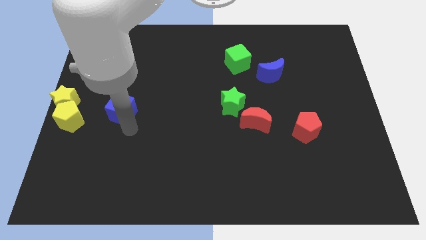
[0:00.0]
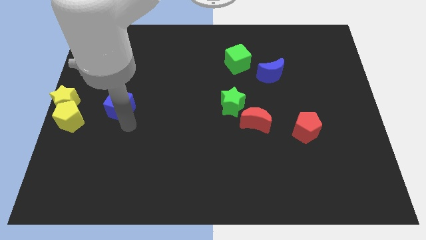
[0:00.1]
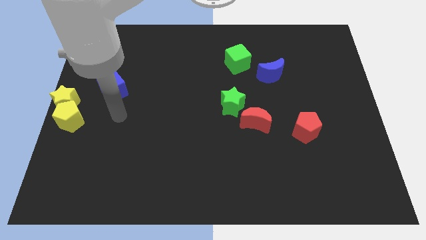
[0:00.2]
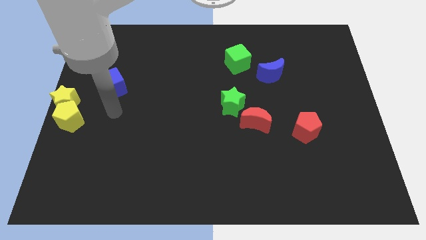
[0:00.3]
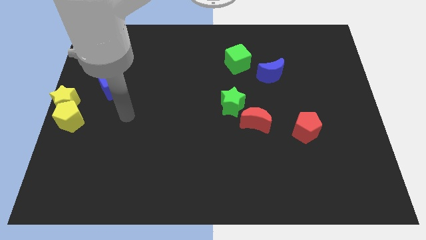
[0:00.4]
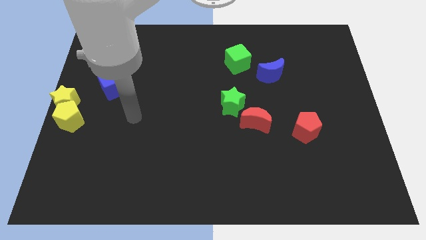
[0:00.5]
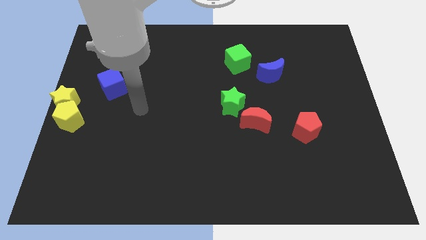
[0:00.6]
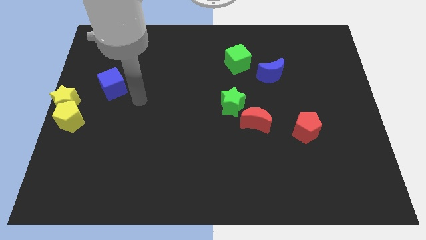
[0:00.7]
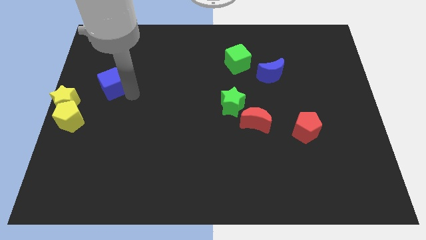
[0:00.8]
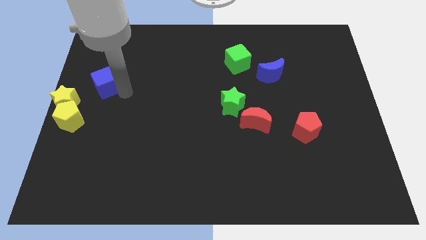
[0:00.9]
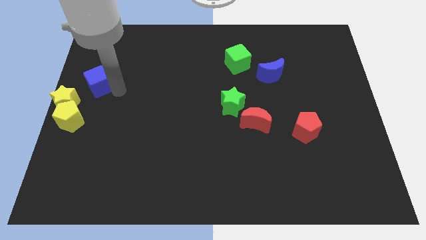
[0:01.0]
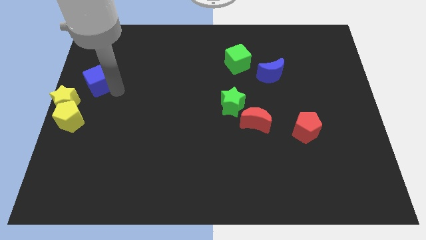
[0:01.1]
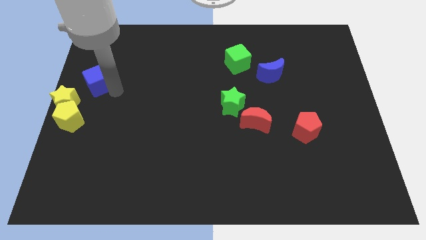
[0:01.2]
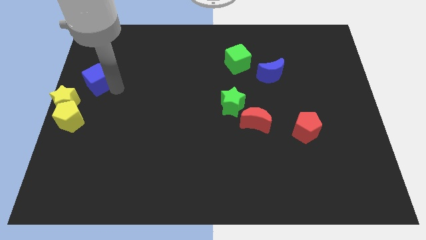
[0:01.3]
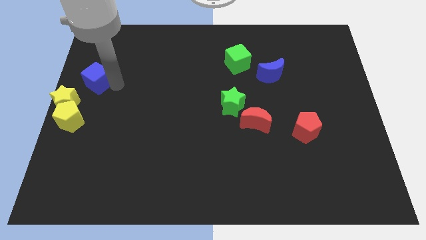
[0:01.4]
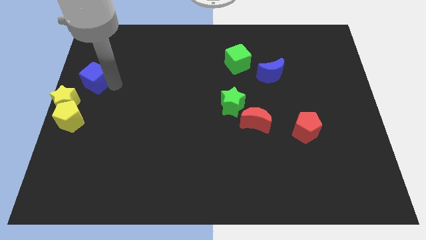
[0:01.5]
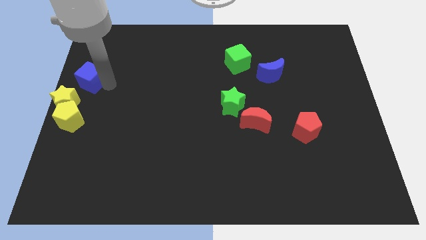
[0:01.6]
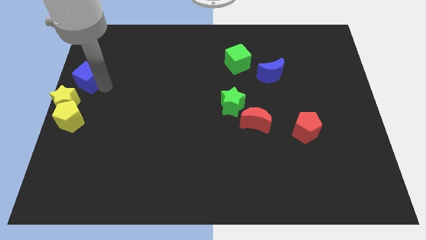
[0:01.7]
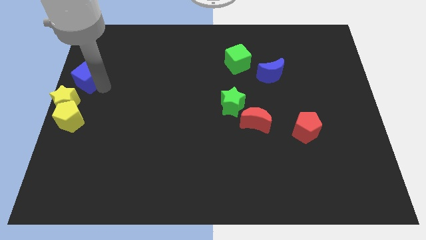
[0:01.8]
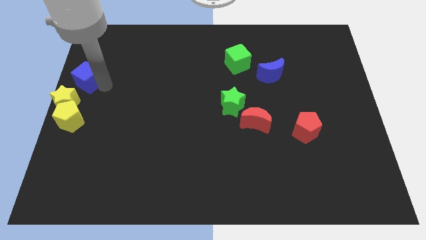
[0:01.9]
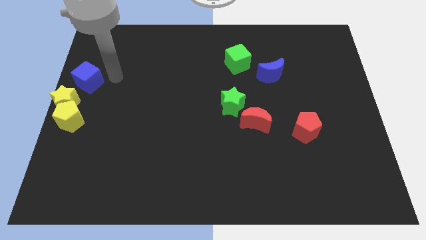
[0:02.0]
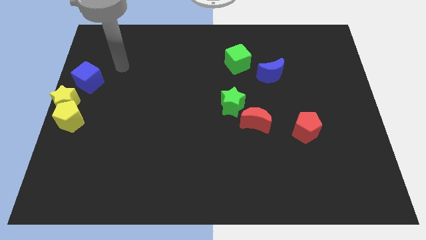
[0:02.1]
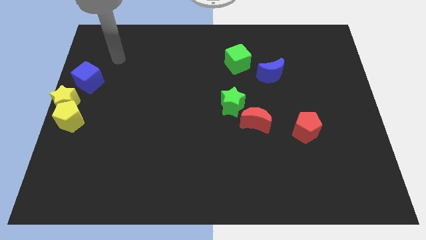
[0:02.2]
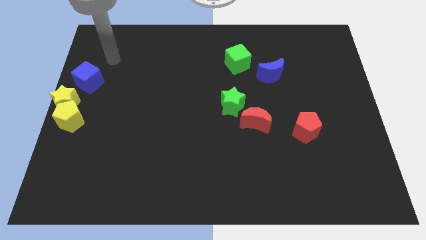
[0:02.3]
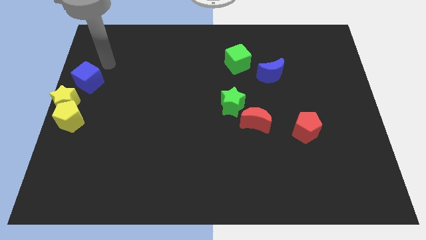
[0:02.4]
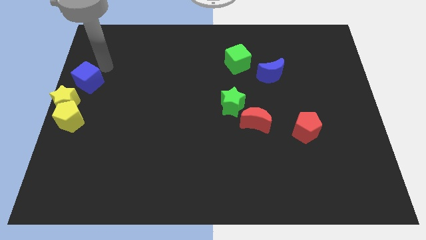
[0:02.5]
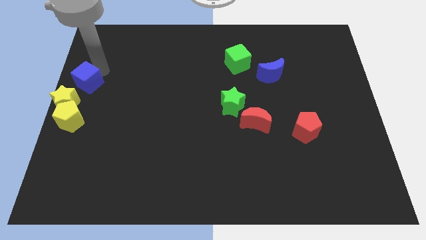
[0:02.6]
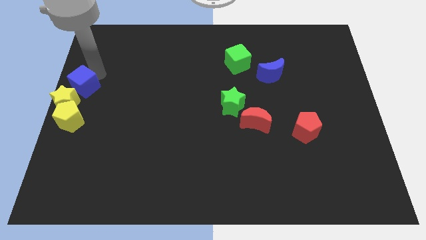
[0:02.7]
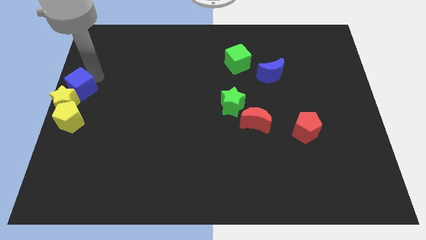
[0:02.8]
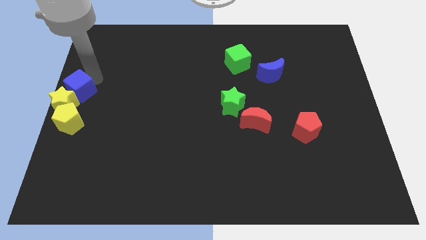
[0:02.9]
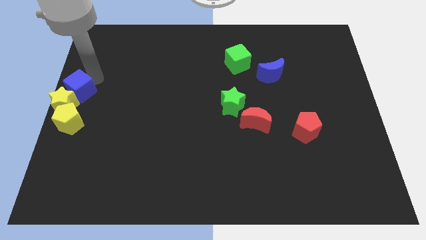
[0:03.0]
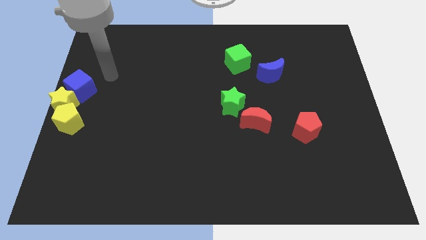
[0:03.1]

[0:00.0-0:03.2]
push the blue cube into the yellow star

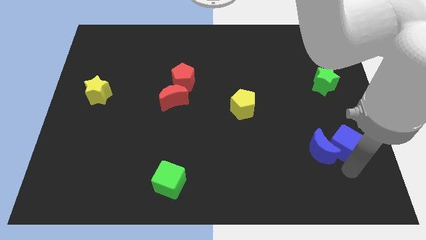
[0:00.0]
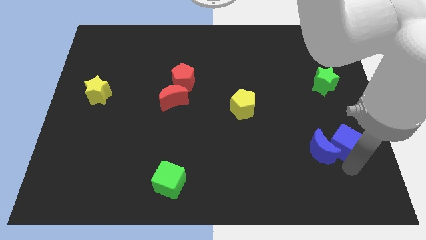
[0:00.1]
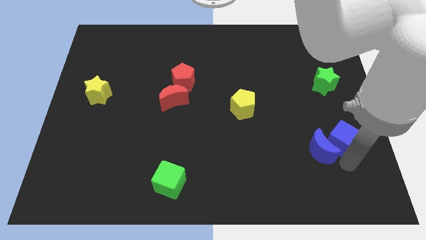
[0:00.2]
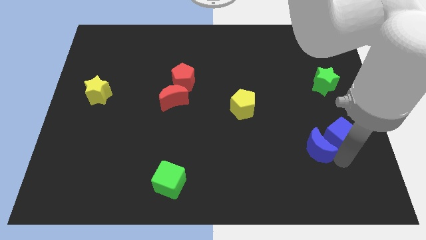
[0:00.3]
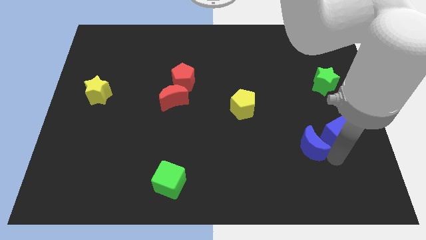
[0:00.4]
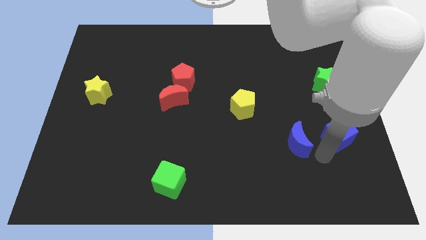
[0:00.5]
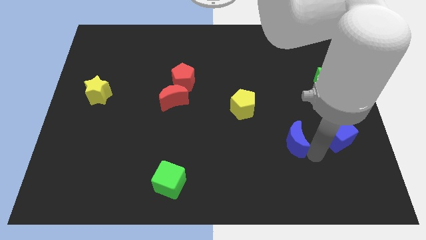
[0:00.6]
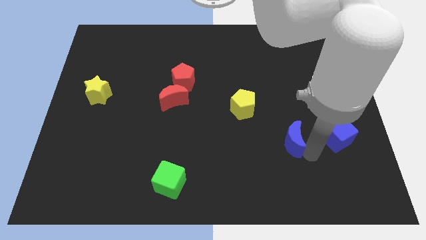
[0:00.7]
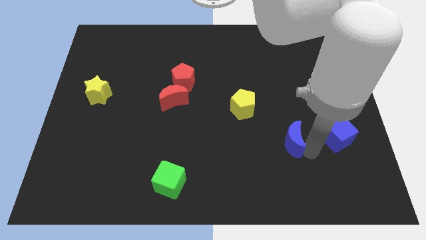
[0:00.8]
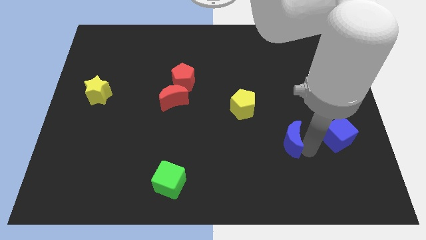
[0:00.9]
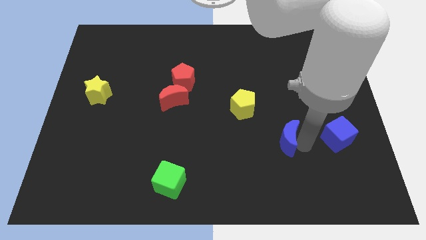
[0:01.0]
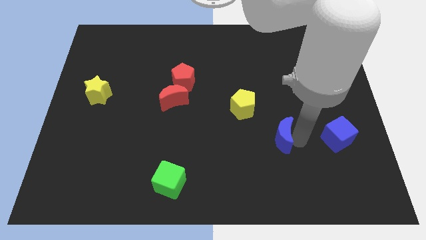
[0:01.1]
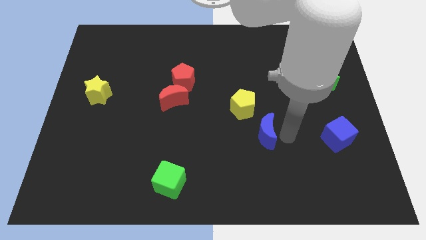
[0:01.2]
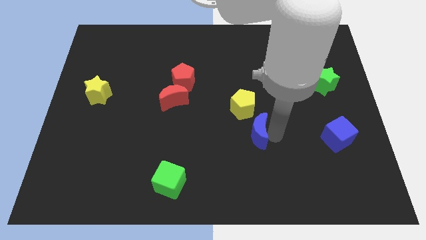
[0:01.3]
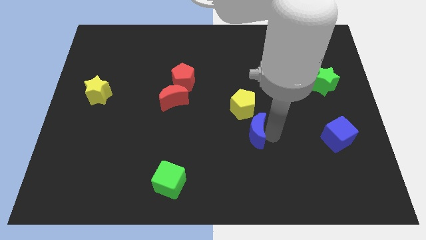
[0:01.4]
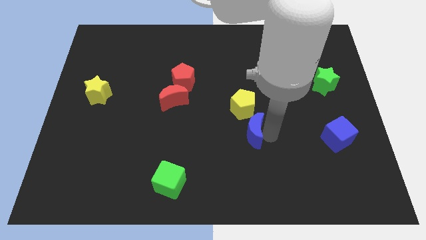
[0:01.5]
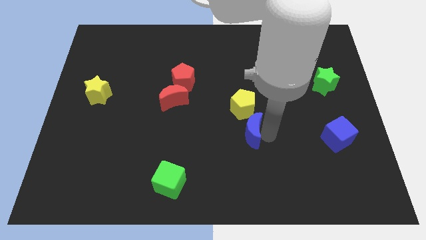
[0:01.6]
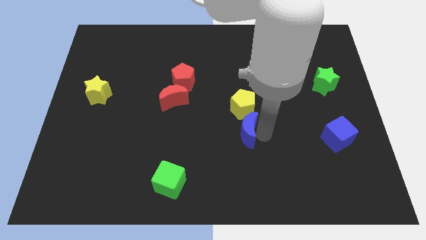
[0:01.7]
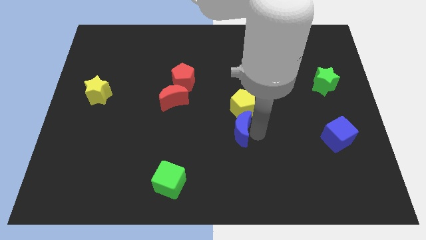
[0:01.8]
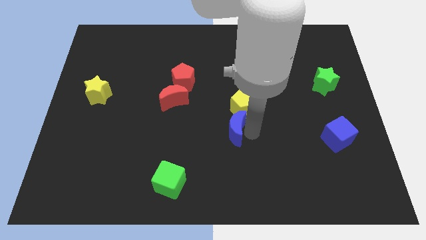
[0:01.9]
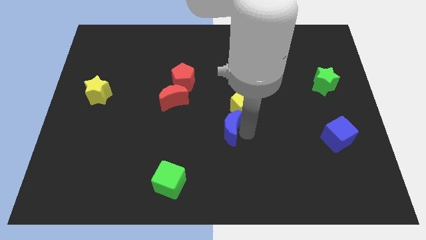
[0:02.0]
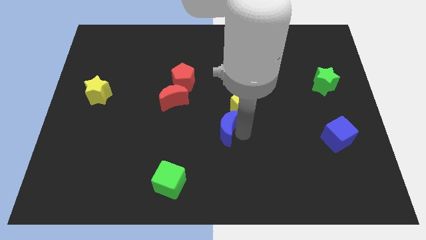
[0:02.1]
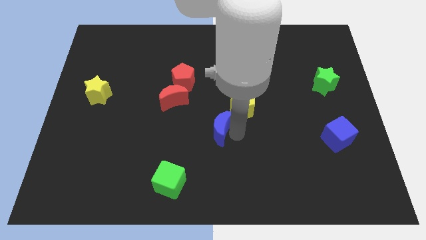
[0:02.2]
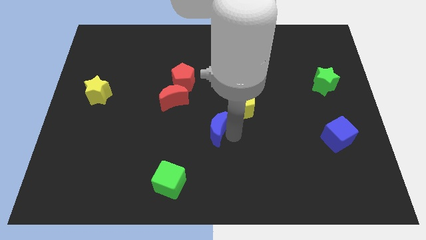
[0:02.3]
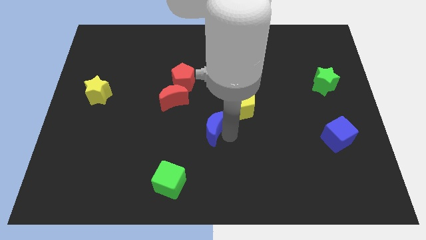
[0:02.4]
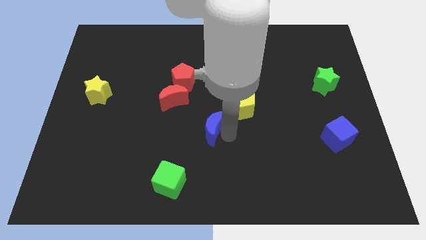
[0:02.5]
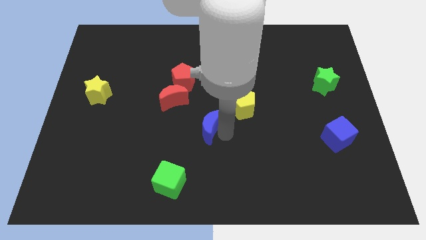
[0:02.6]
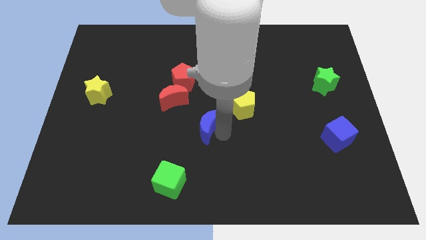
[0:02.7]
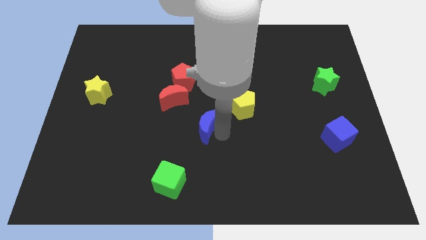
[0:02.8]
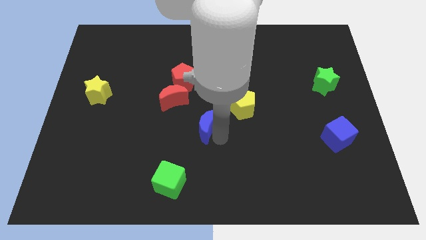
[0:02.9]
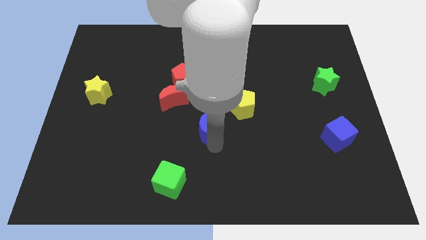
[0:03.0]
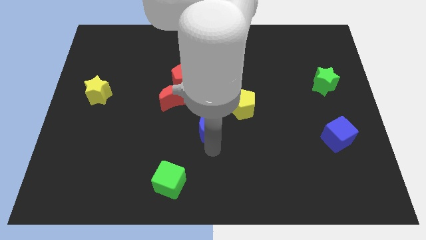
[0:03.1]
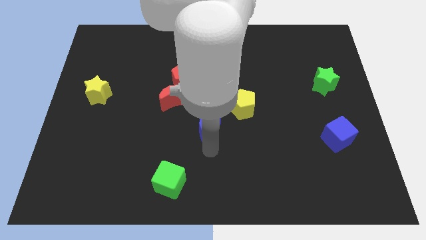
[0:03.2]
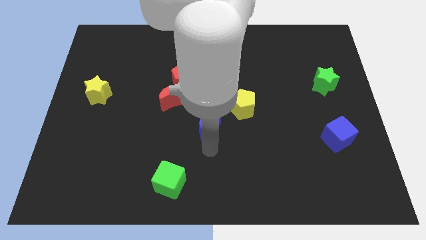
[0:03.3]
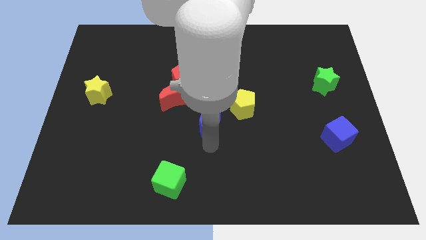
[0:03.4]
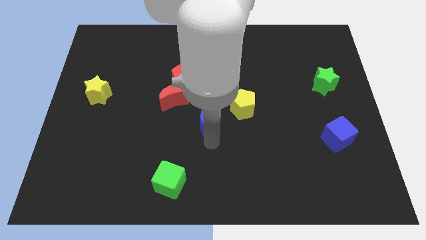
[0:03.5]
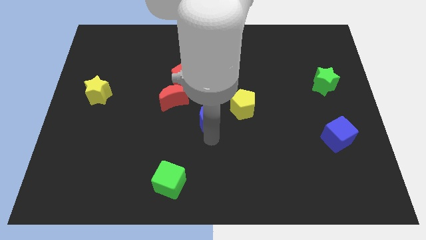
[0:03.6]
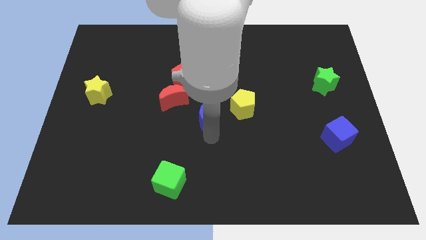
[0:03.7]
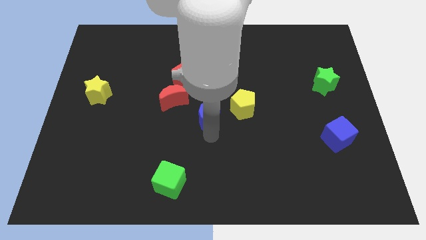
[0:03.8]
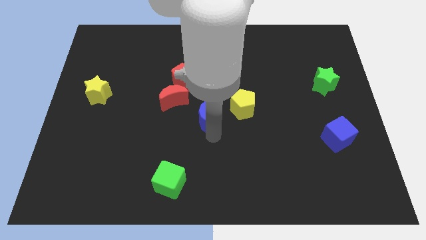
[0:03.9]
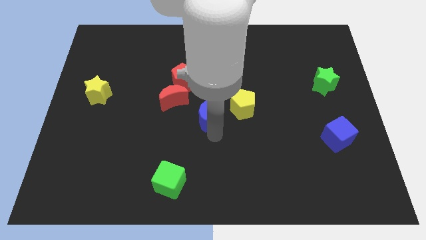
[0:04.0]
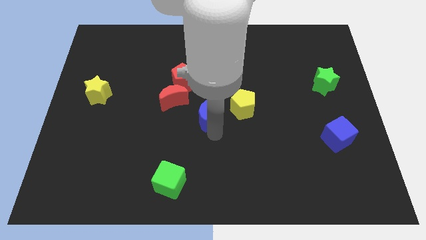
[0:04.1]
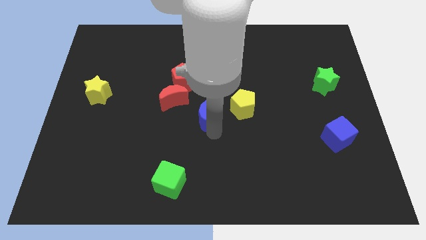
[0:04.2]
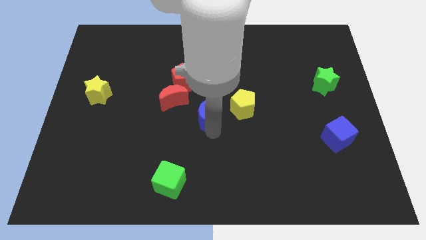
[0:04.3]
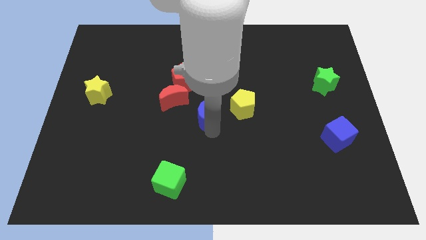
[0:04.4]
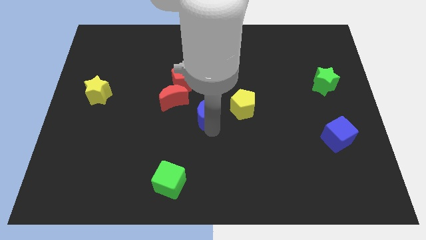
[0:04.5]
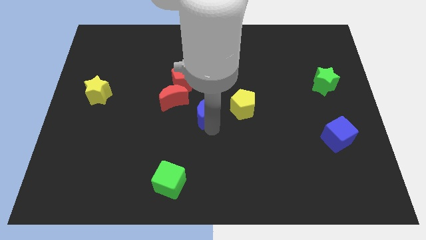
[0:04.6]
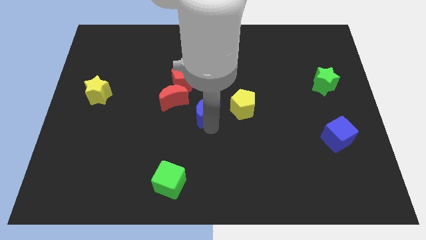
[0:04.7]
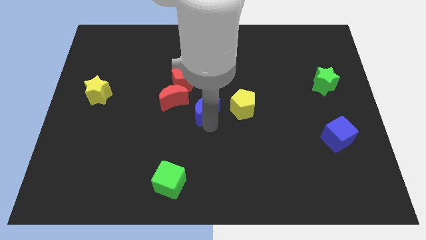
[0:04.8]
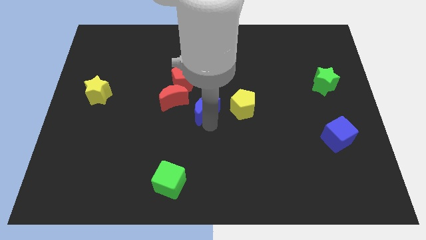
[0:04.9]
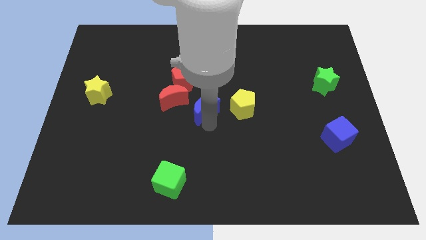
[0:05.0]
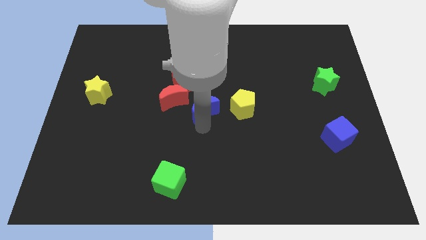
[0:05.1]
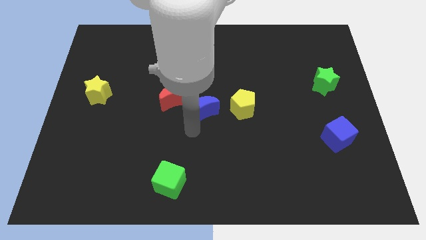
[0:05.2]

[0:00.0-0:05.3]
push the blue crescent towards the center of the board

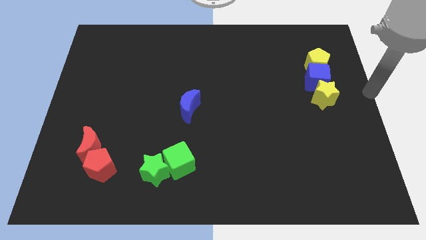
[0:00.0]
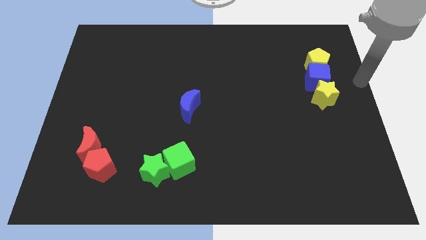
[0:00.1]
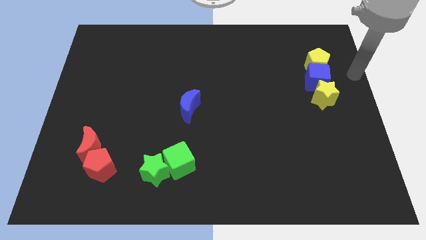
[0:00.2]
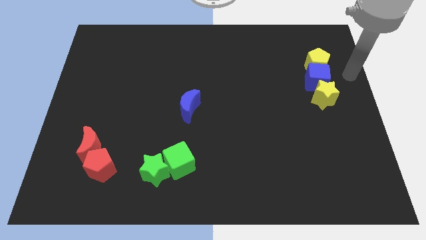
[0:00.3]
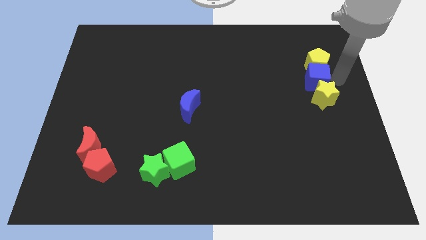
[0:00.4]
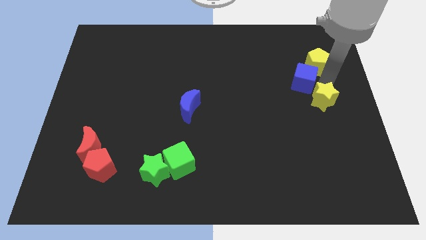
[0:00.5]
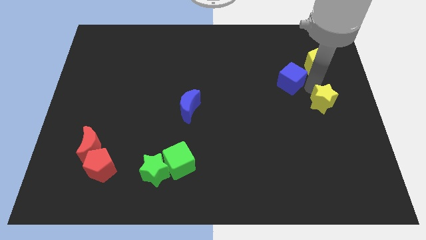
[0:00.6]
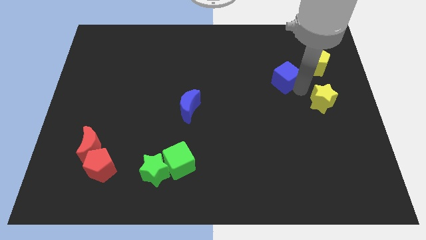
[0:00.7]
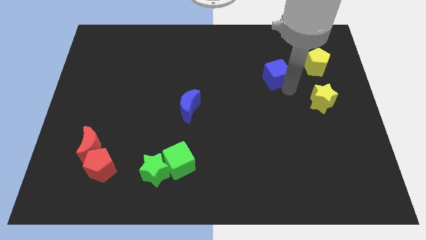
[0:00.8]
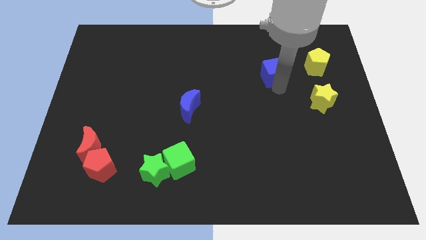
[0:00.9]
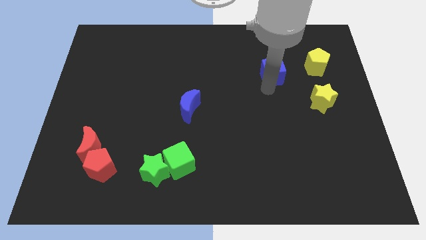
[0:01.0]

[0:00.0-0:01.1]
separate the blue cube from the line of blocks
